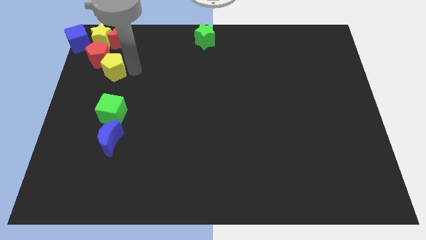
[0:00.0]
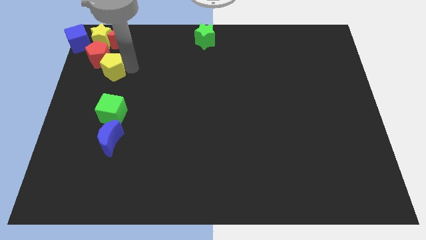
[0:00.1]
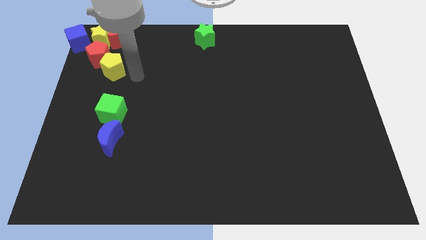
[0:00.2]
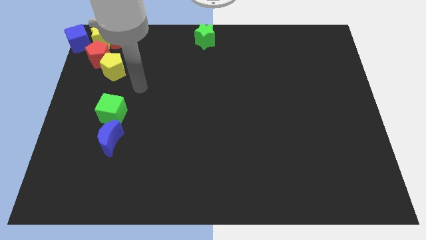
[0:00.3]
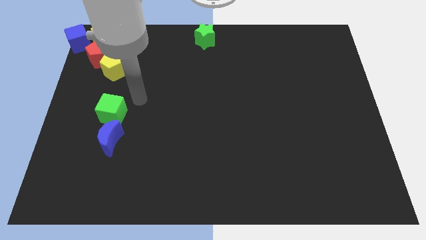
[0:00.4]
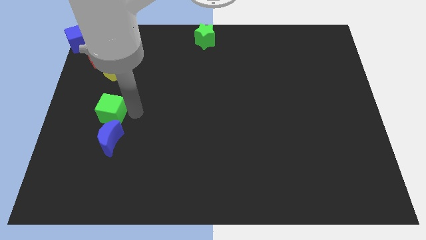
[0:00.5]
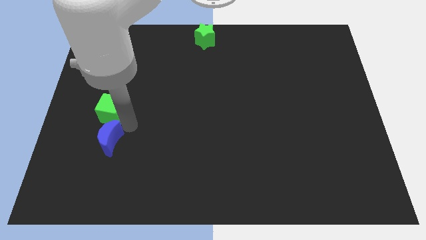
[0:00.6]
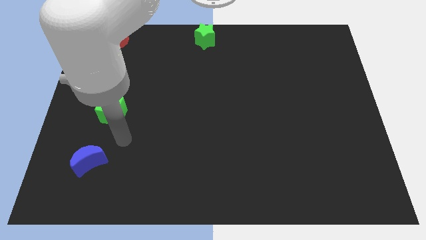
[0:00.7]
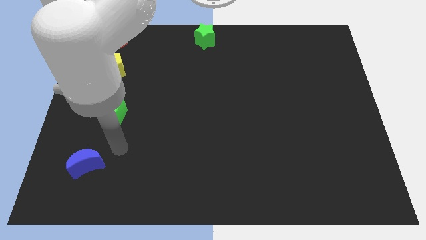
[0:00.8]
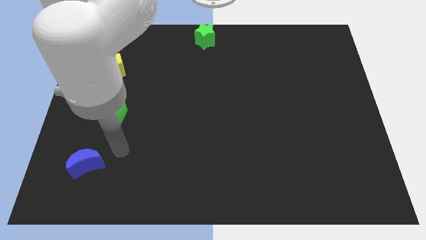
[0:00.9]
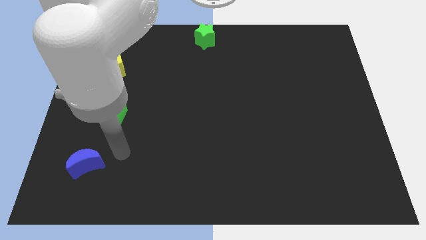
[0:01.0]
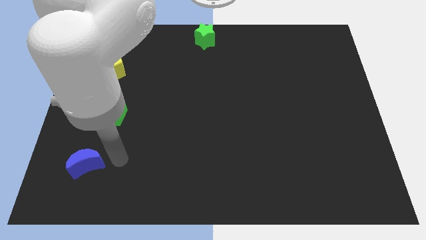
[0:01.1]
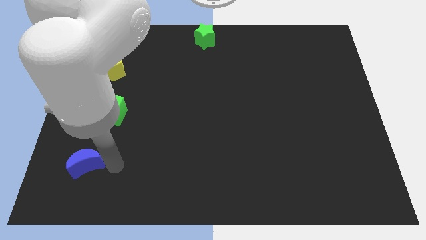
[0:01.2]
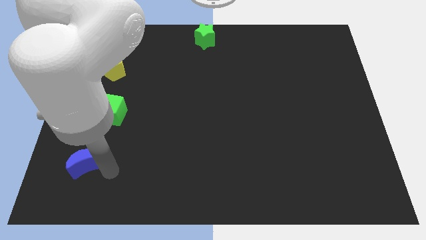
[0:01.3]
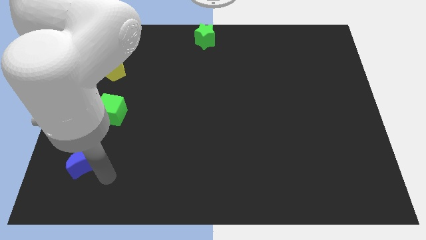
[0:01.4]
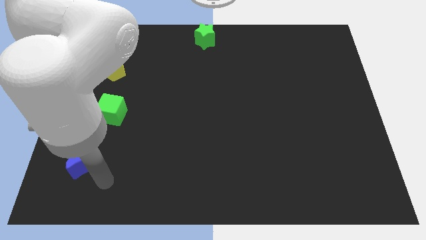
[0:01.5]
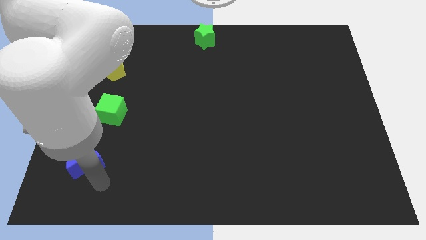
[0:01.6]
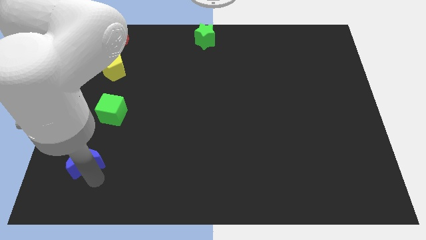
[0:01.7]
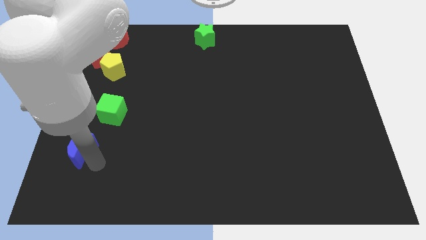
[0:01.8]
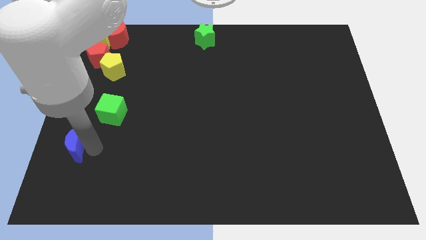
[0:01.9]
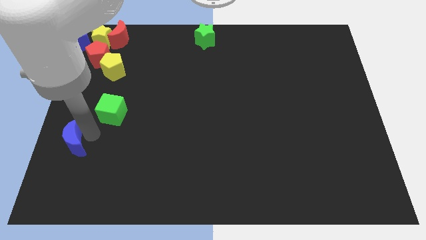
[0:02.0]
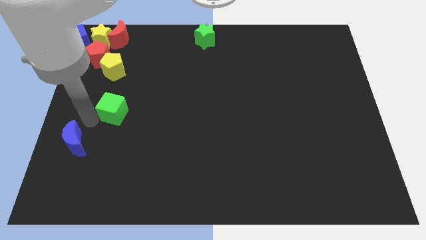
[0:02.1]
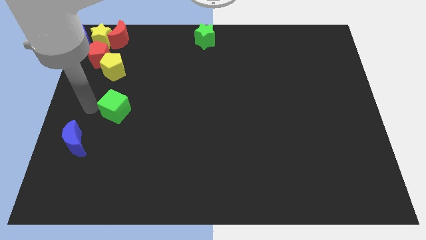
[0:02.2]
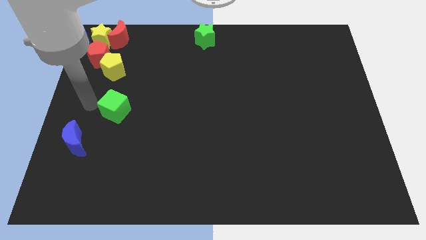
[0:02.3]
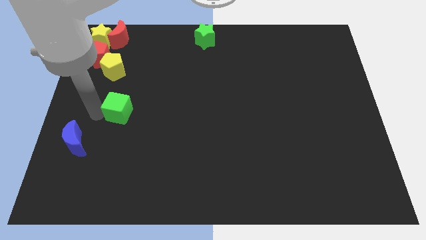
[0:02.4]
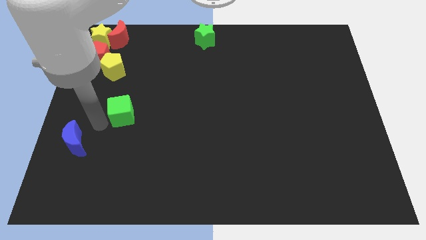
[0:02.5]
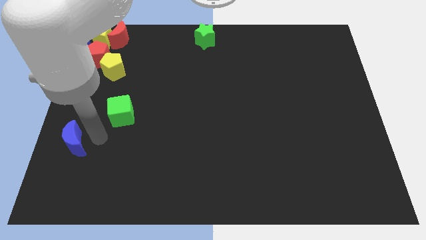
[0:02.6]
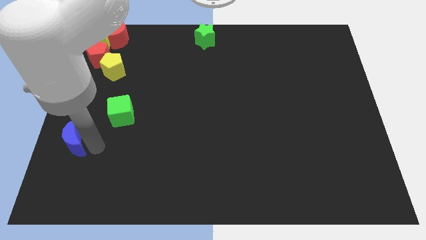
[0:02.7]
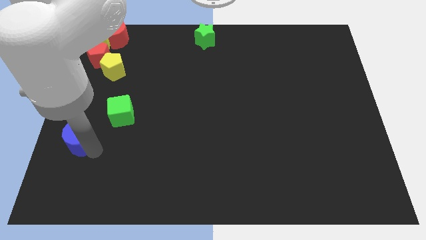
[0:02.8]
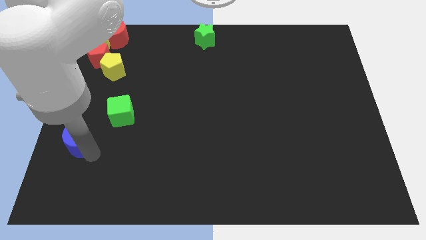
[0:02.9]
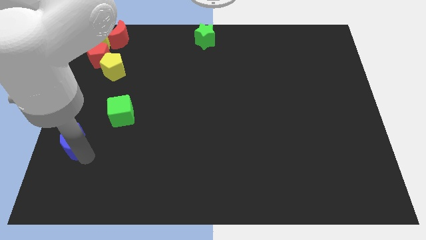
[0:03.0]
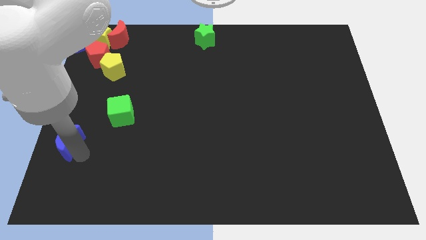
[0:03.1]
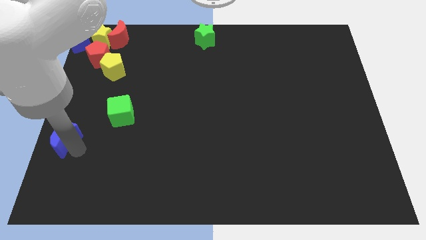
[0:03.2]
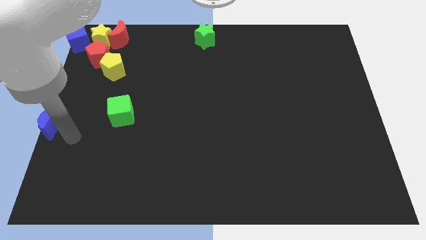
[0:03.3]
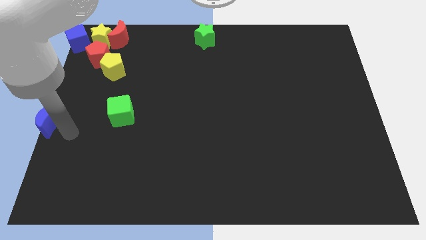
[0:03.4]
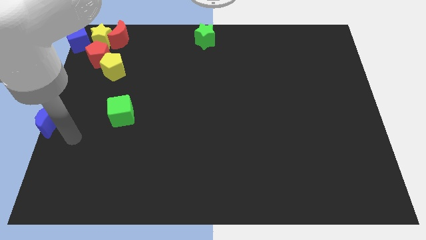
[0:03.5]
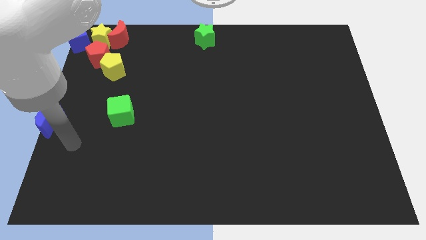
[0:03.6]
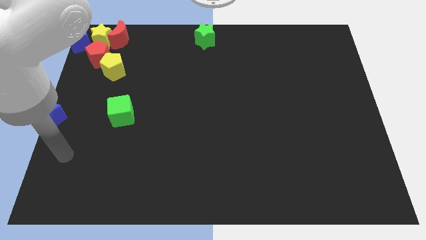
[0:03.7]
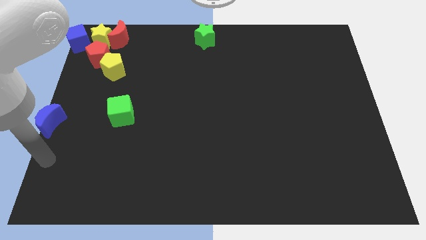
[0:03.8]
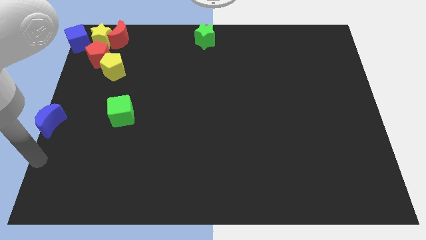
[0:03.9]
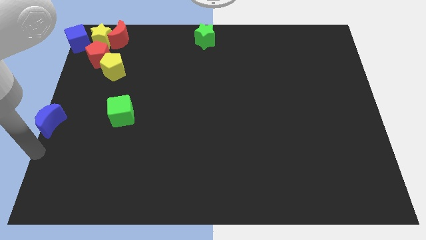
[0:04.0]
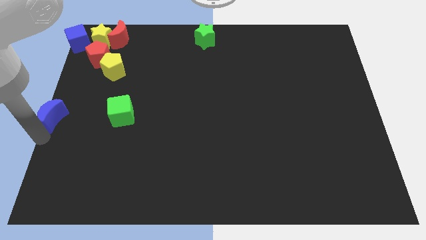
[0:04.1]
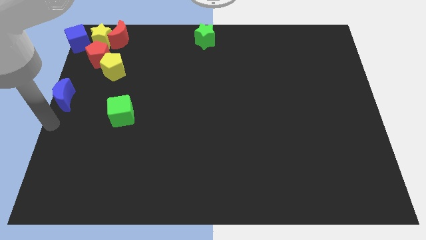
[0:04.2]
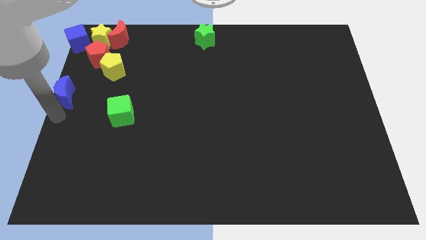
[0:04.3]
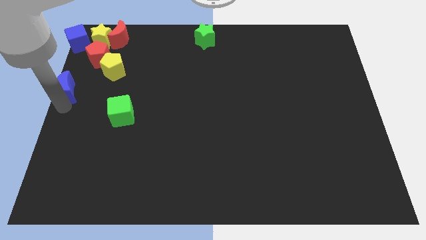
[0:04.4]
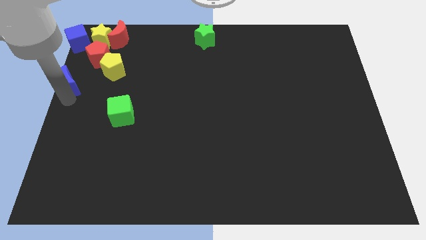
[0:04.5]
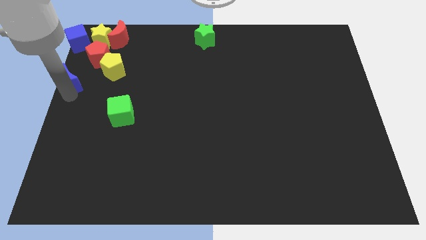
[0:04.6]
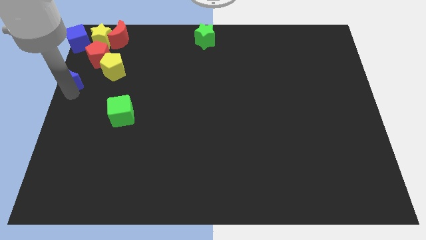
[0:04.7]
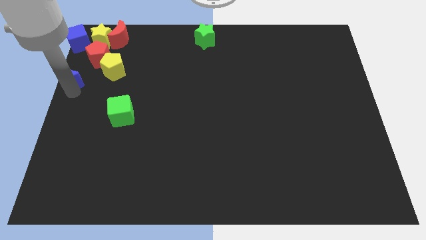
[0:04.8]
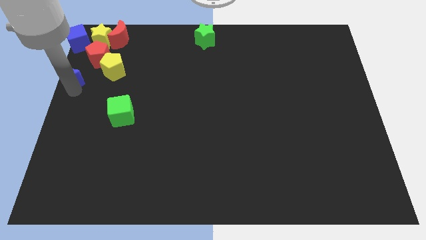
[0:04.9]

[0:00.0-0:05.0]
push the blue crescent towards the blue cube

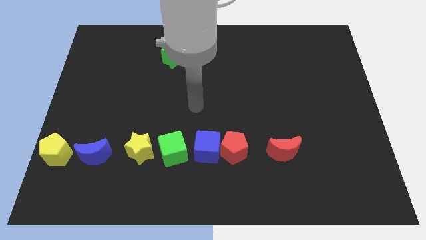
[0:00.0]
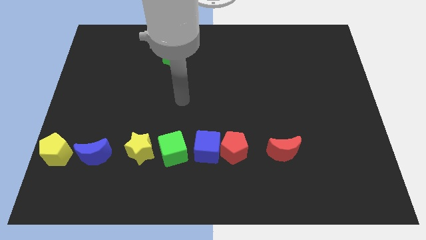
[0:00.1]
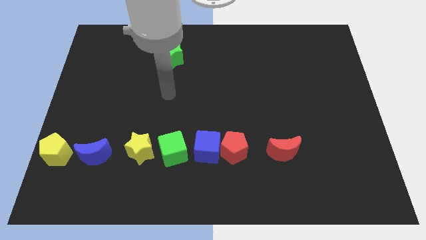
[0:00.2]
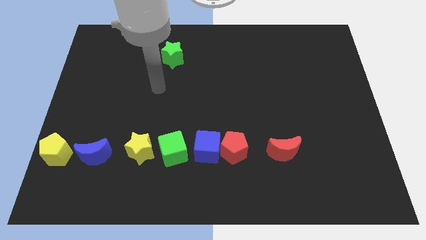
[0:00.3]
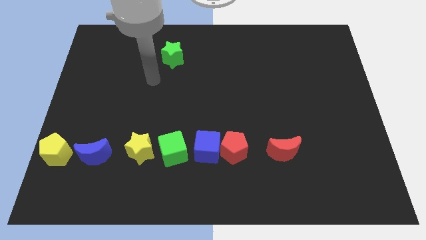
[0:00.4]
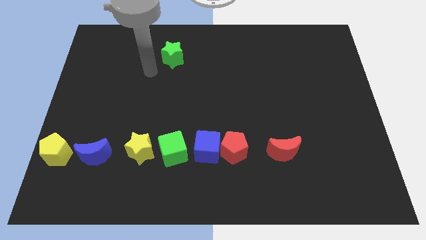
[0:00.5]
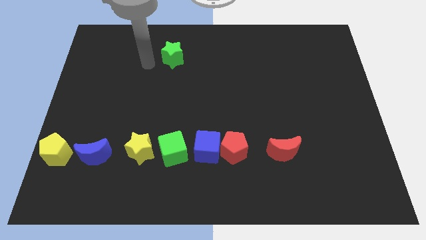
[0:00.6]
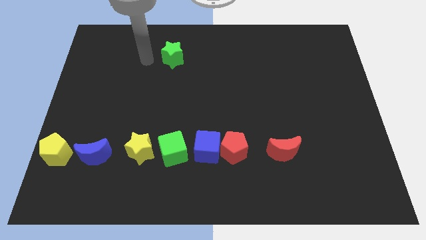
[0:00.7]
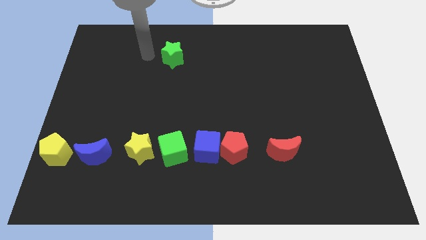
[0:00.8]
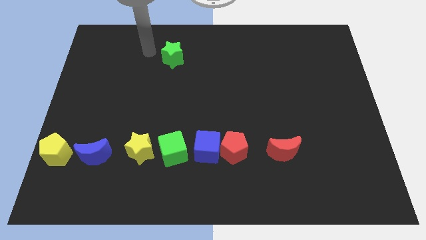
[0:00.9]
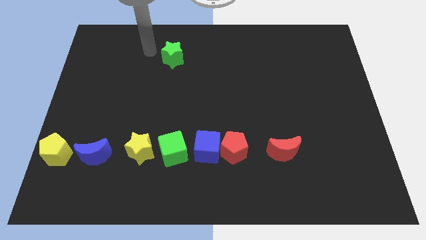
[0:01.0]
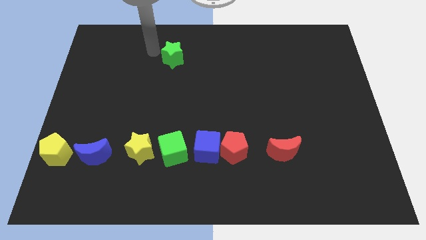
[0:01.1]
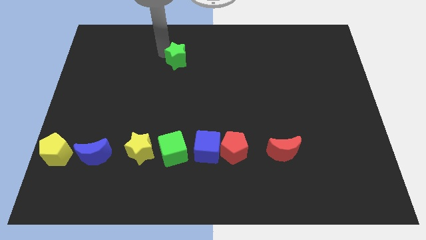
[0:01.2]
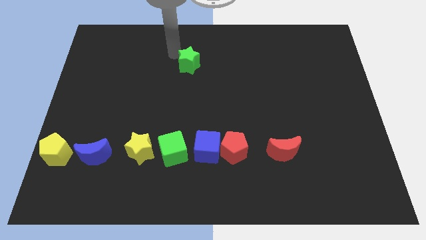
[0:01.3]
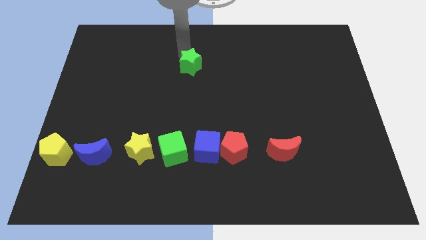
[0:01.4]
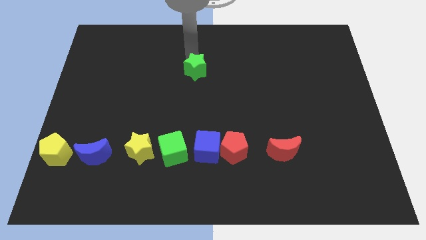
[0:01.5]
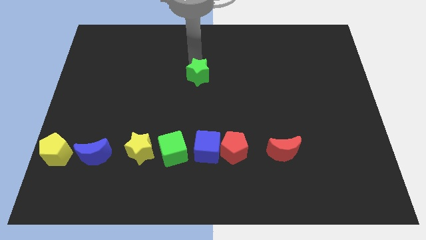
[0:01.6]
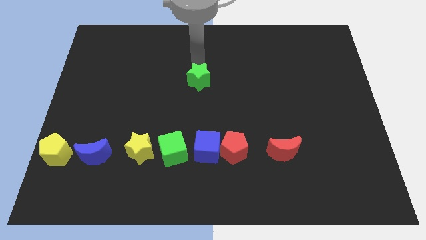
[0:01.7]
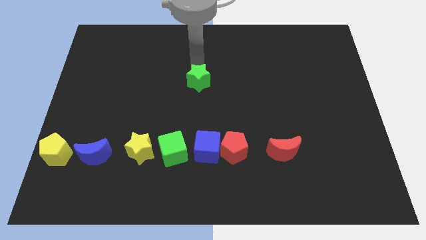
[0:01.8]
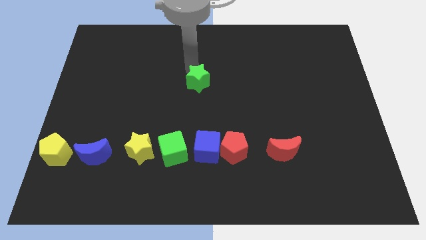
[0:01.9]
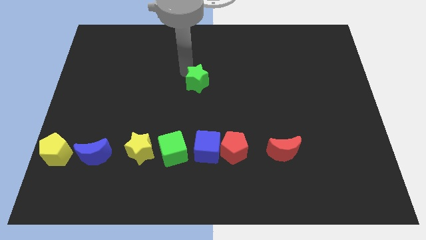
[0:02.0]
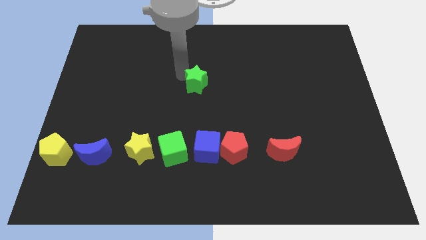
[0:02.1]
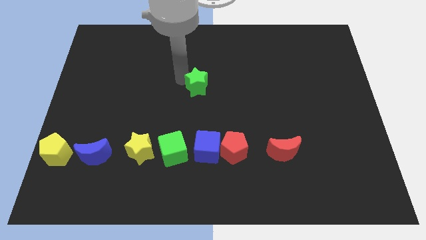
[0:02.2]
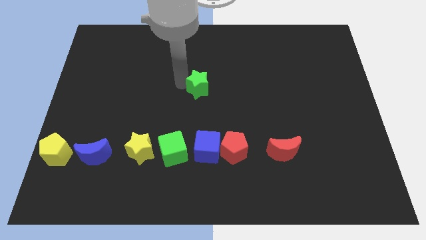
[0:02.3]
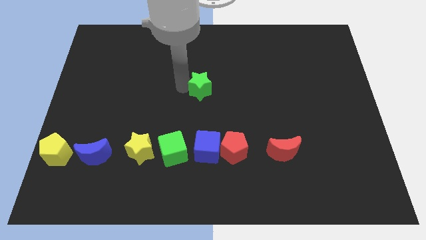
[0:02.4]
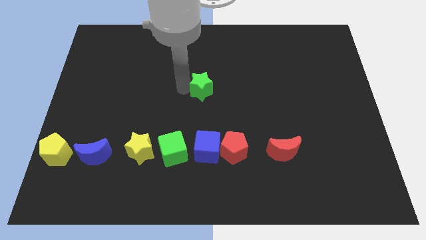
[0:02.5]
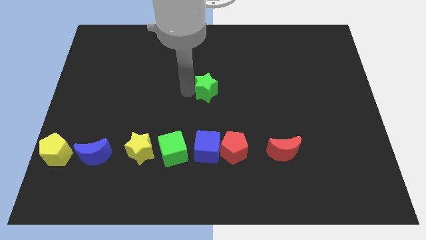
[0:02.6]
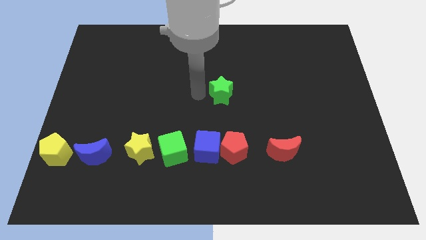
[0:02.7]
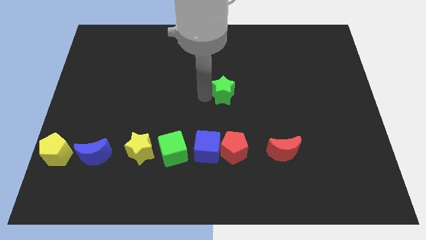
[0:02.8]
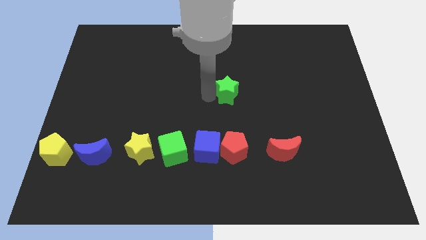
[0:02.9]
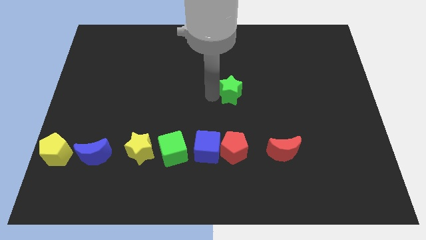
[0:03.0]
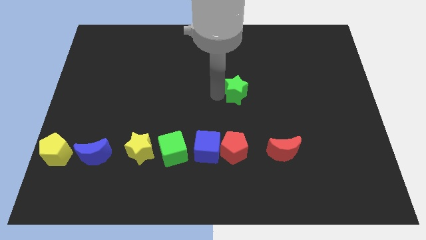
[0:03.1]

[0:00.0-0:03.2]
place the green star vertical to the red pentagon

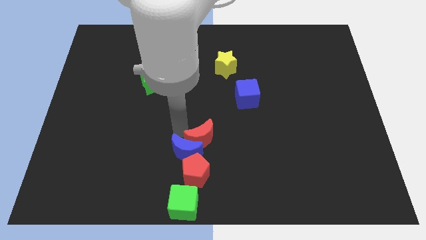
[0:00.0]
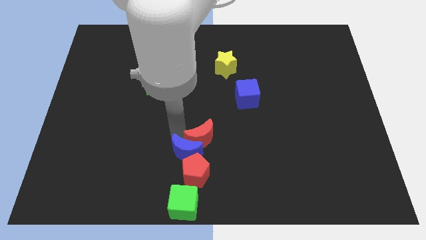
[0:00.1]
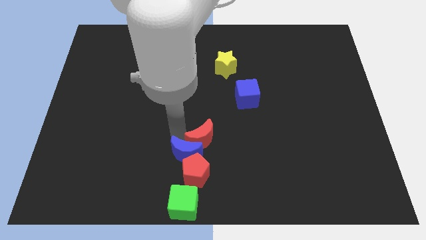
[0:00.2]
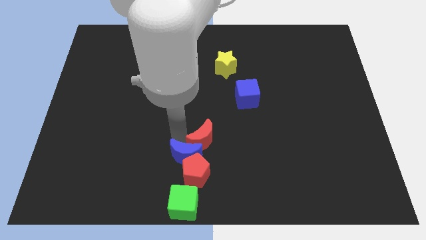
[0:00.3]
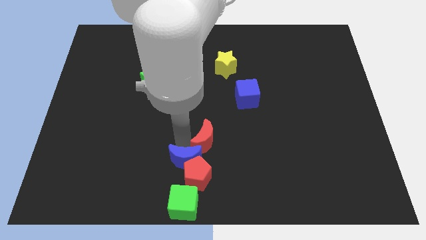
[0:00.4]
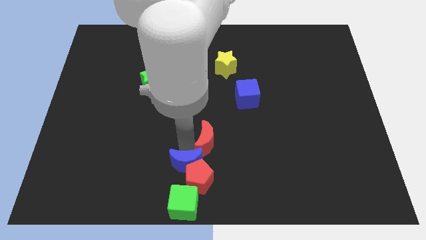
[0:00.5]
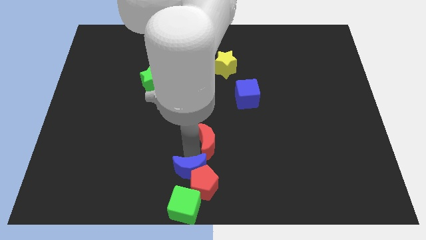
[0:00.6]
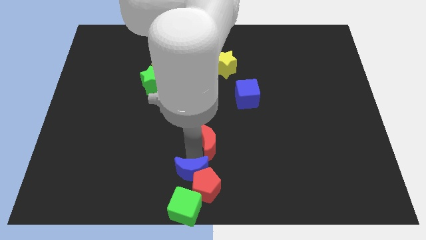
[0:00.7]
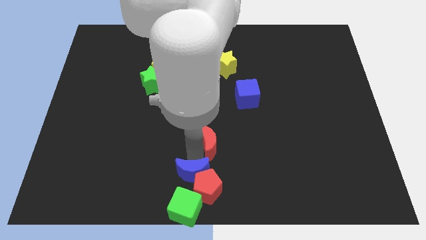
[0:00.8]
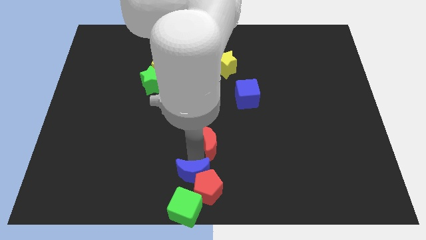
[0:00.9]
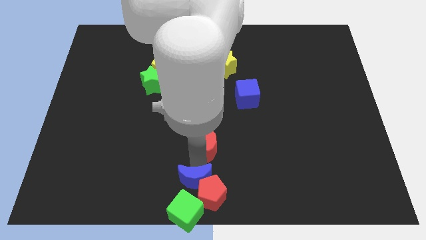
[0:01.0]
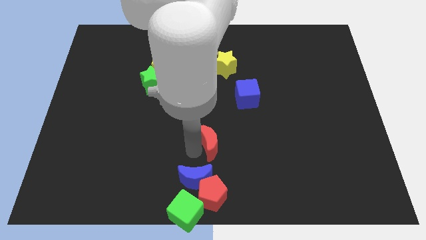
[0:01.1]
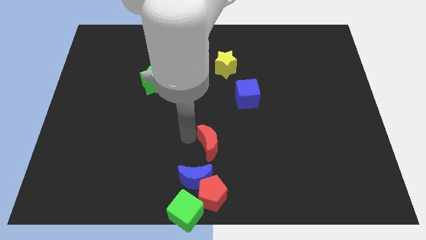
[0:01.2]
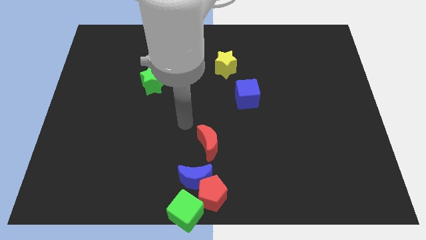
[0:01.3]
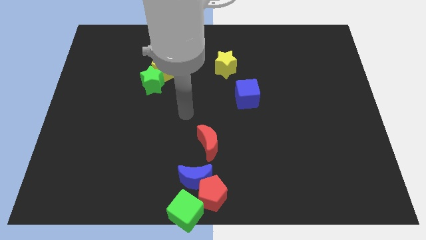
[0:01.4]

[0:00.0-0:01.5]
push the green cube red pentagon with the blue crescent to the bottom center of the board
